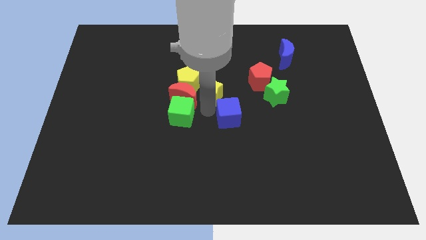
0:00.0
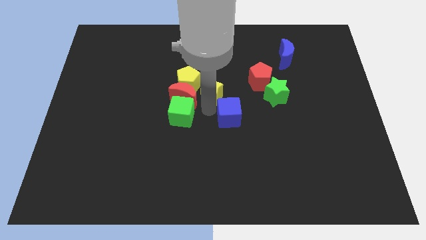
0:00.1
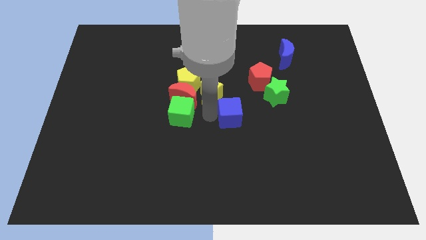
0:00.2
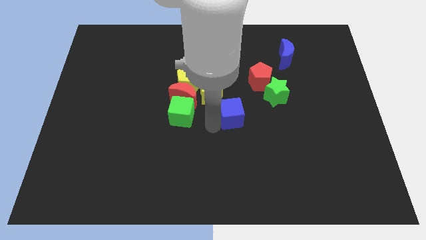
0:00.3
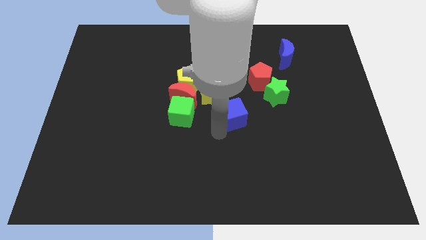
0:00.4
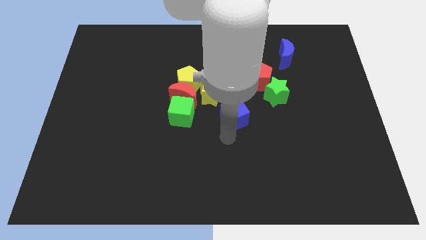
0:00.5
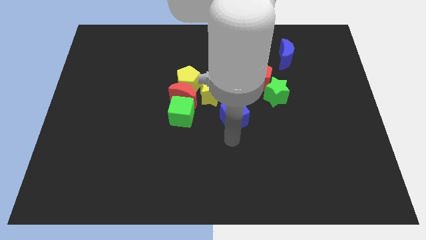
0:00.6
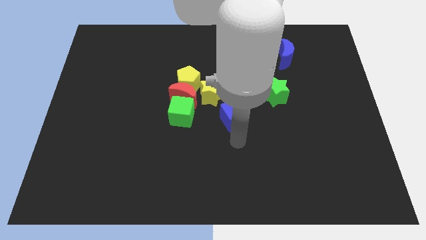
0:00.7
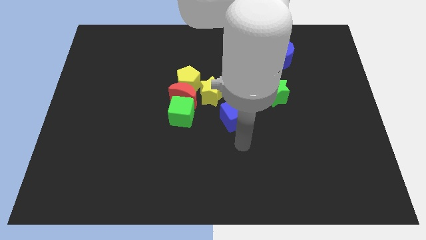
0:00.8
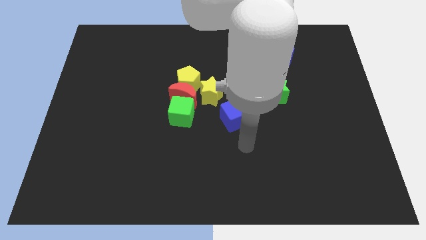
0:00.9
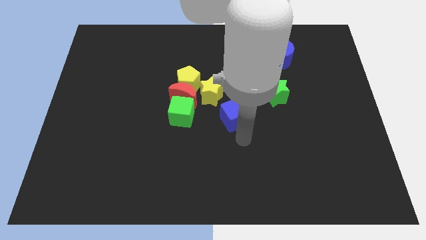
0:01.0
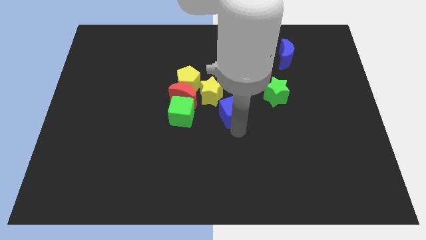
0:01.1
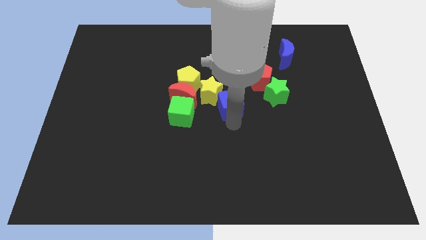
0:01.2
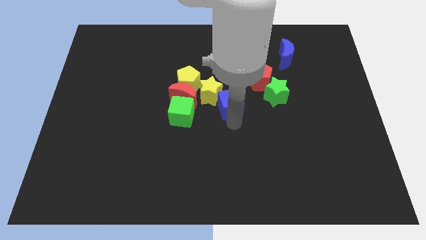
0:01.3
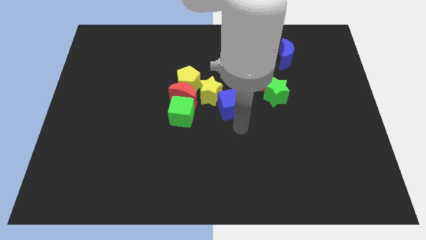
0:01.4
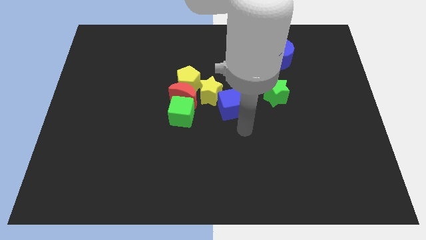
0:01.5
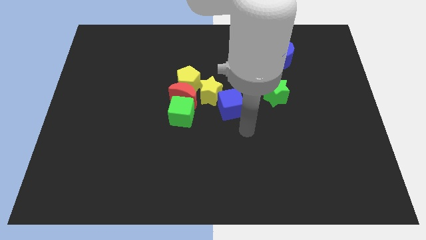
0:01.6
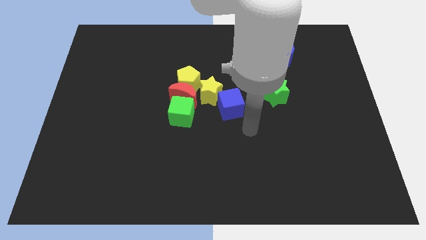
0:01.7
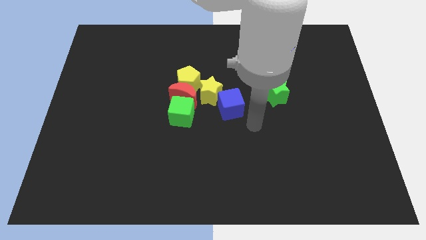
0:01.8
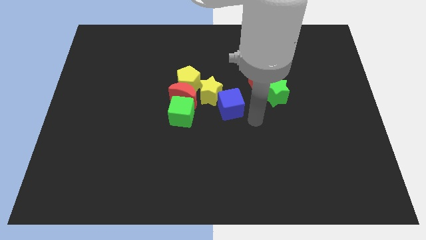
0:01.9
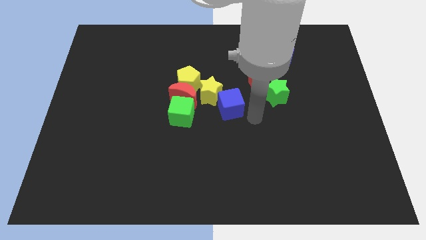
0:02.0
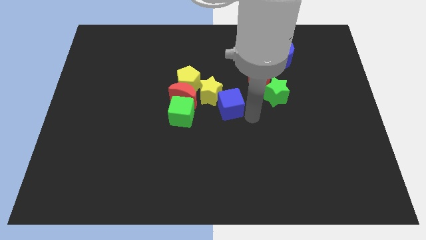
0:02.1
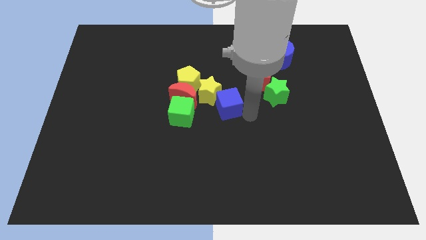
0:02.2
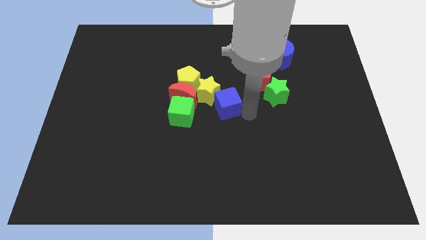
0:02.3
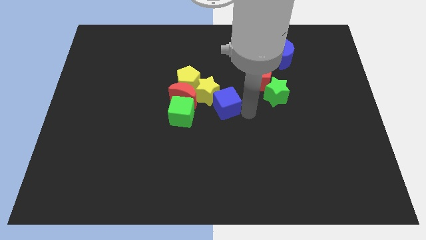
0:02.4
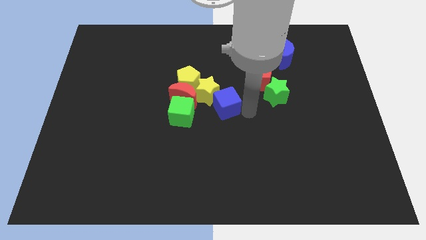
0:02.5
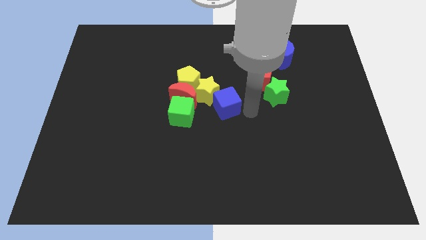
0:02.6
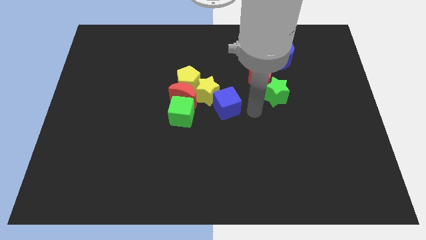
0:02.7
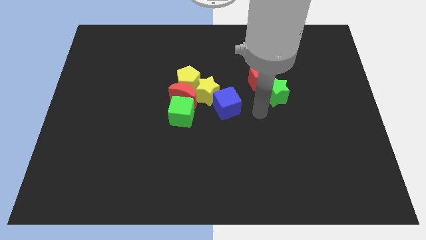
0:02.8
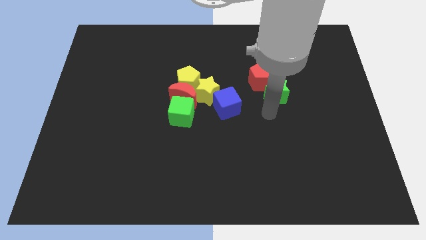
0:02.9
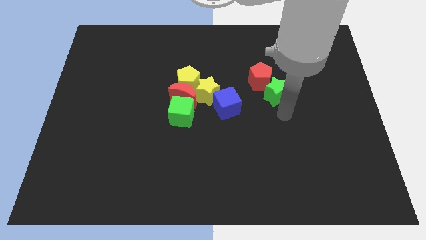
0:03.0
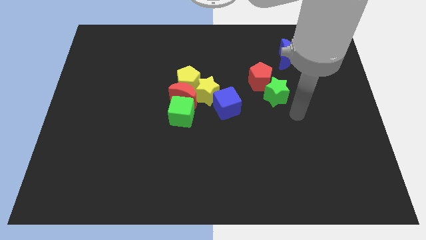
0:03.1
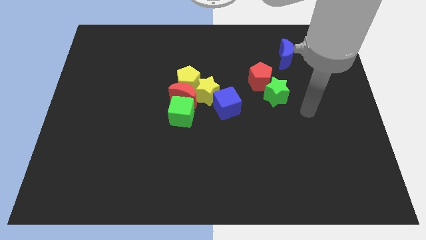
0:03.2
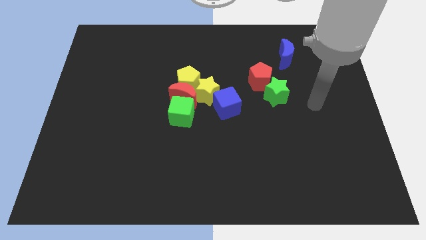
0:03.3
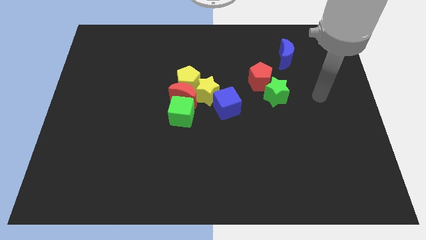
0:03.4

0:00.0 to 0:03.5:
place the blue cube towards the bottom right side of the yellow star

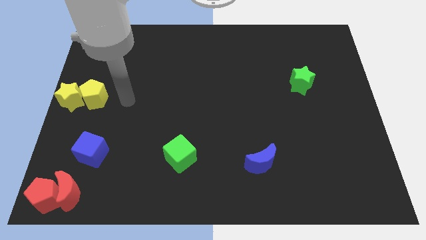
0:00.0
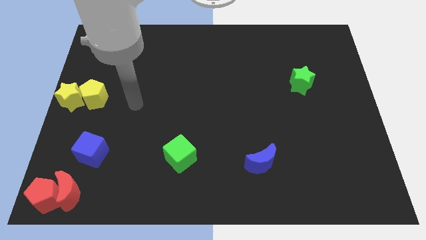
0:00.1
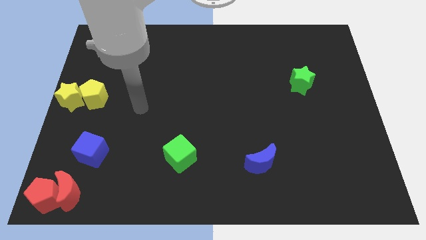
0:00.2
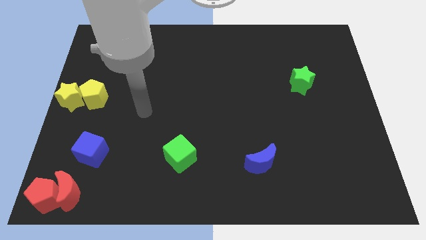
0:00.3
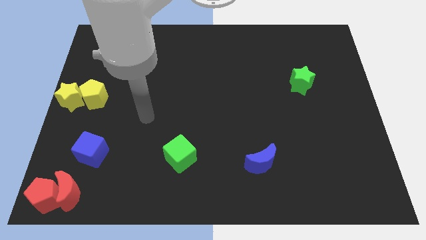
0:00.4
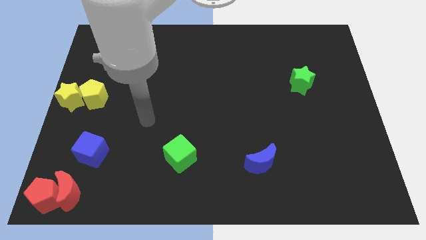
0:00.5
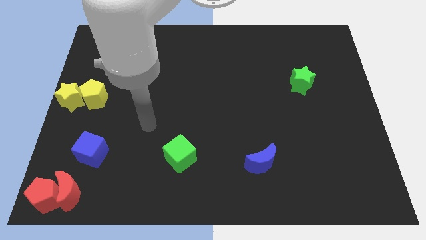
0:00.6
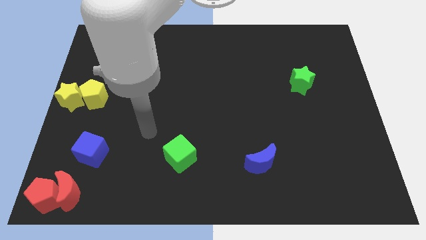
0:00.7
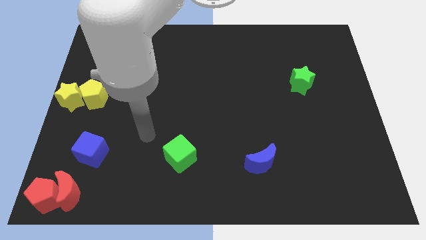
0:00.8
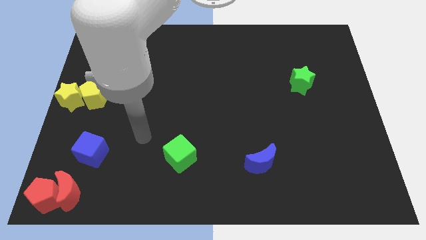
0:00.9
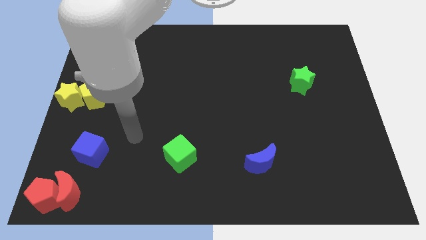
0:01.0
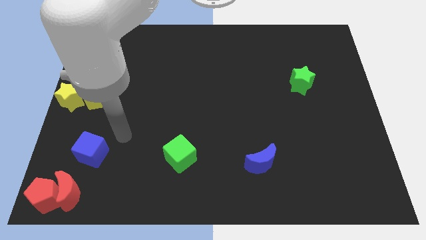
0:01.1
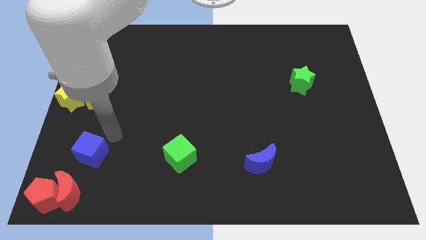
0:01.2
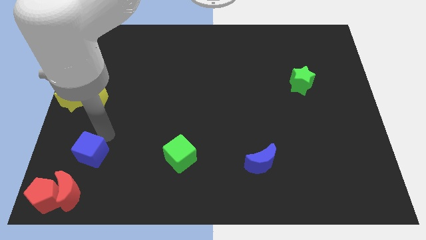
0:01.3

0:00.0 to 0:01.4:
point your arm at the top side of the blue cube

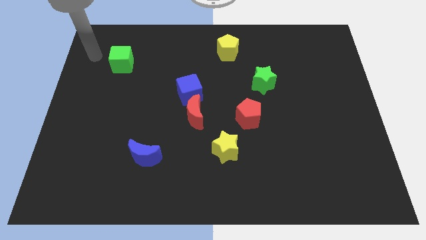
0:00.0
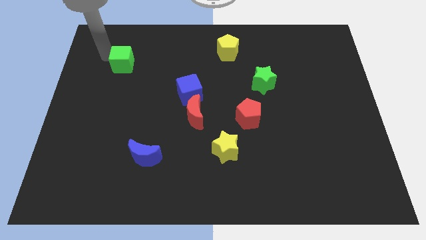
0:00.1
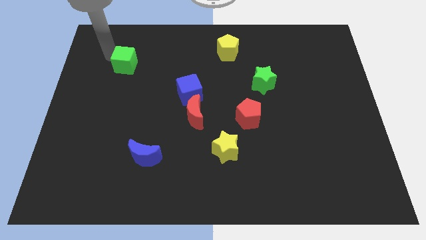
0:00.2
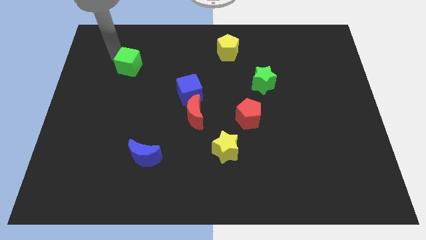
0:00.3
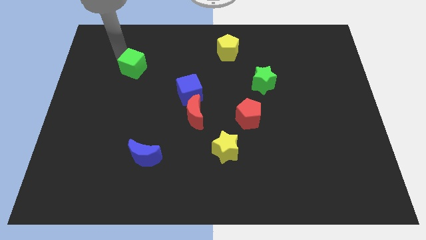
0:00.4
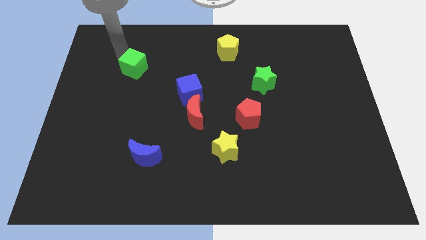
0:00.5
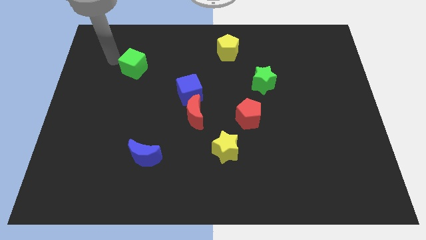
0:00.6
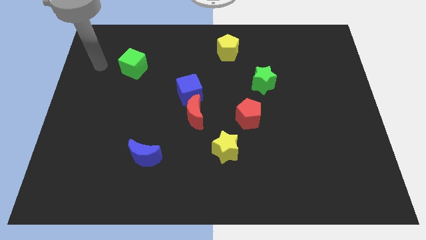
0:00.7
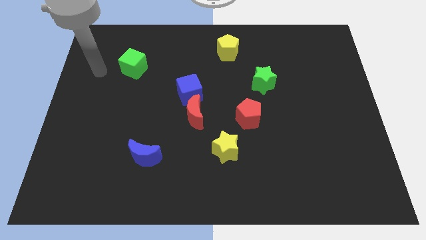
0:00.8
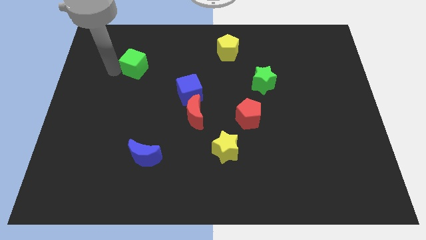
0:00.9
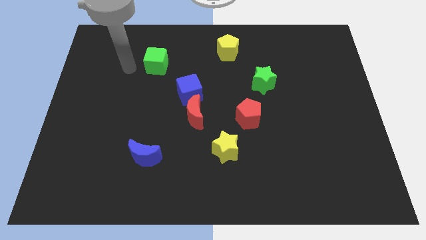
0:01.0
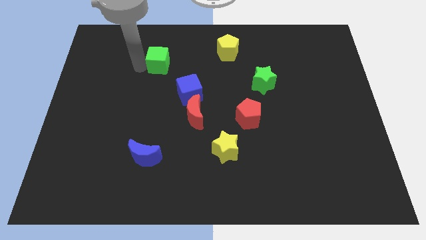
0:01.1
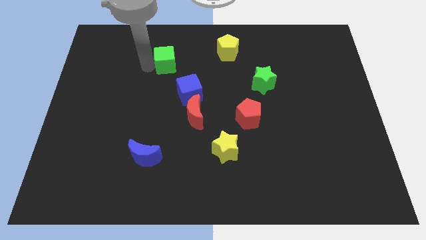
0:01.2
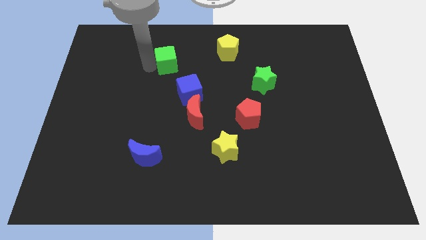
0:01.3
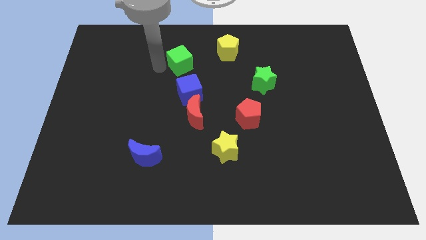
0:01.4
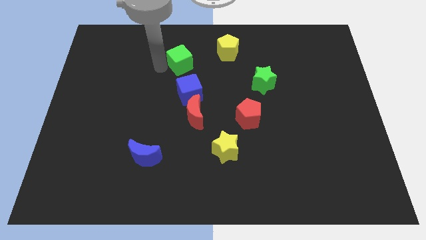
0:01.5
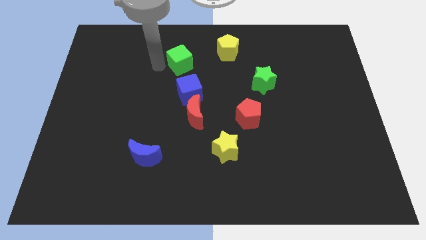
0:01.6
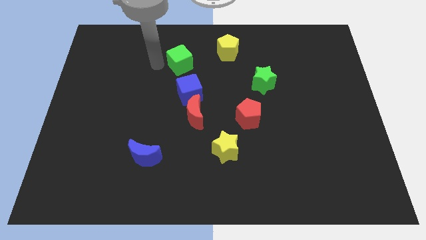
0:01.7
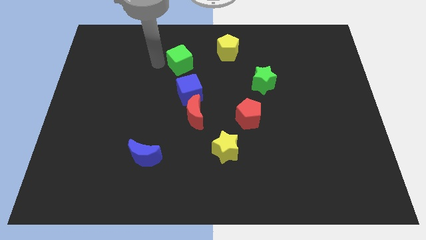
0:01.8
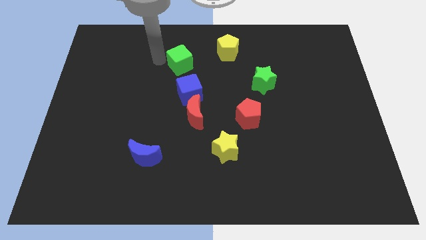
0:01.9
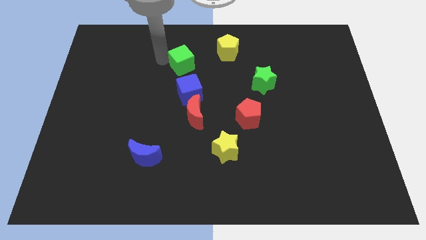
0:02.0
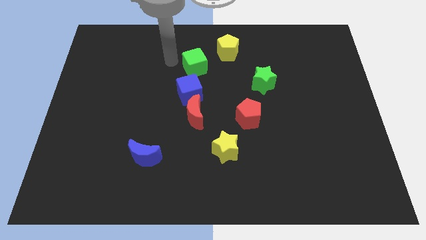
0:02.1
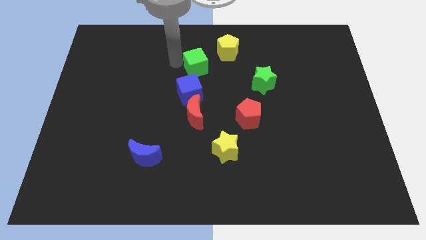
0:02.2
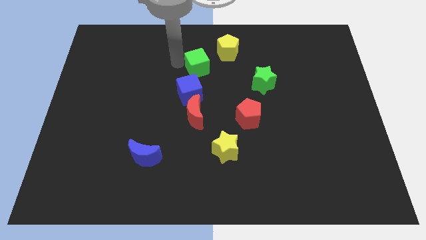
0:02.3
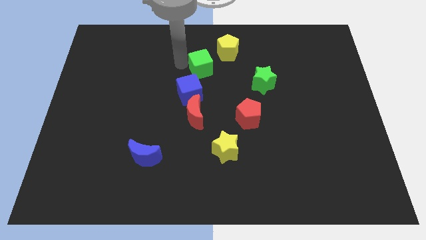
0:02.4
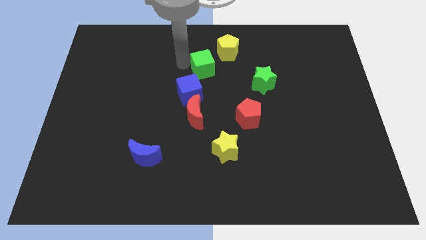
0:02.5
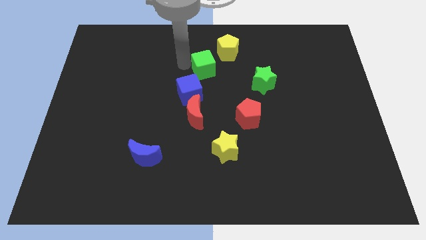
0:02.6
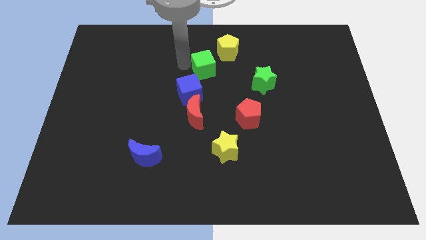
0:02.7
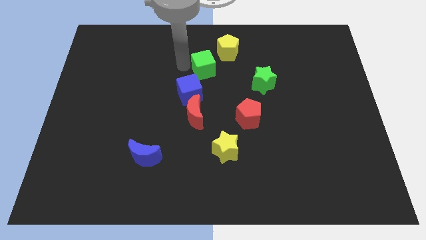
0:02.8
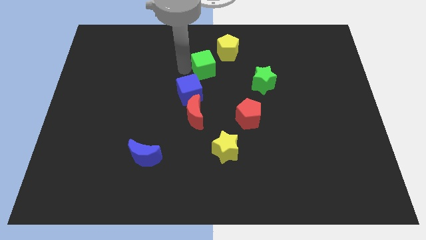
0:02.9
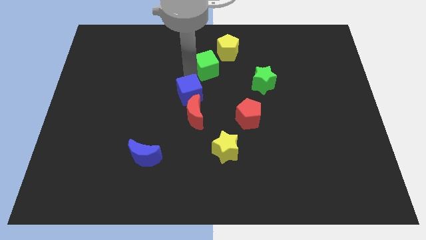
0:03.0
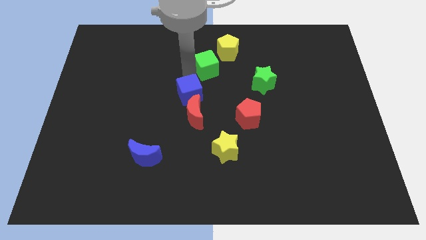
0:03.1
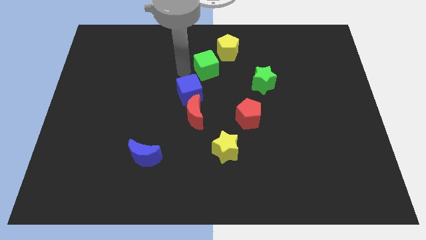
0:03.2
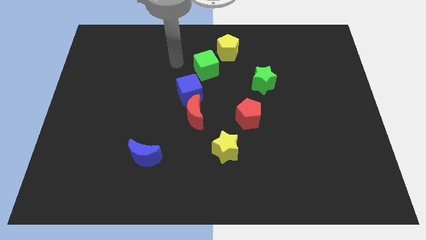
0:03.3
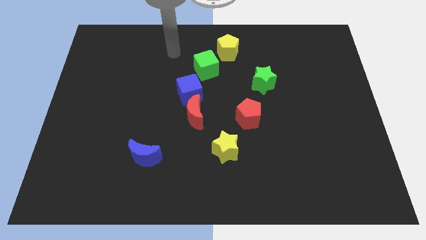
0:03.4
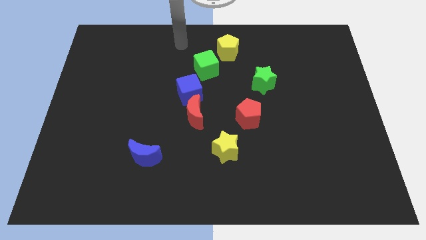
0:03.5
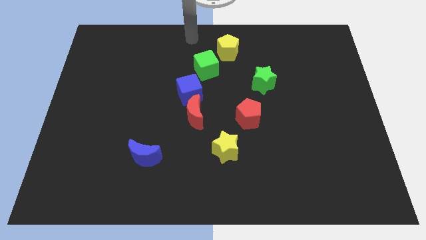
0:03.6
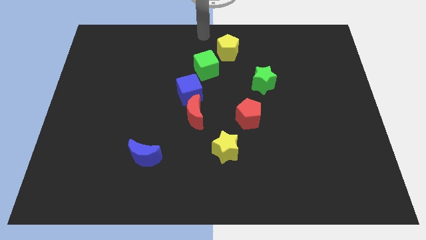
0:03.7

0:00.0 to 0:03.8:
place the green cube diagonally in between the blue cube and yellow pentagon
